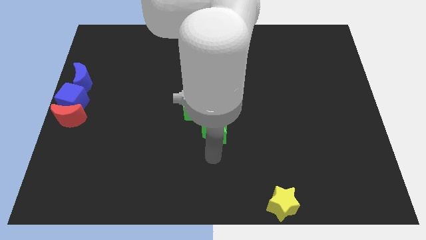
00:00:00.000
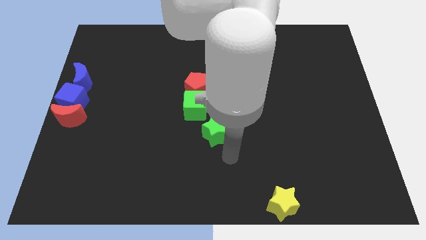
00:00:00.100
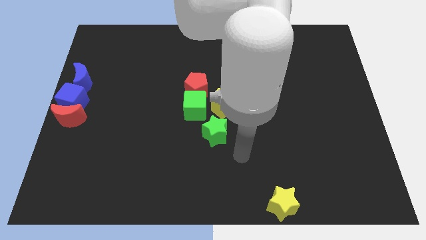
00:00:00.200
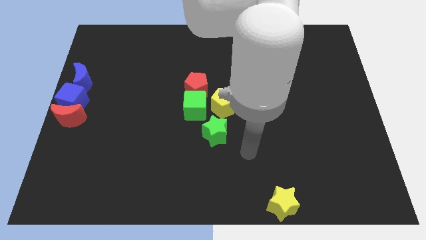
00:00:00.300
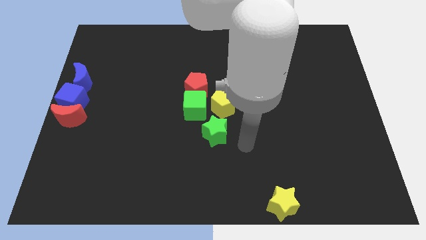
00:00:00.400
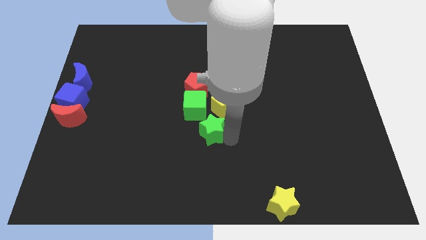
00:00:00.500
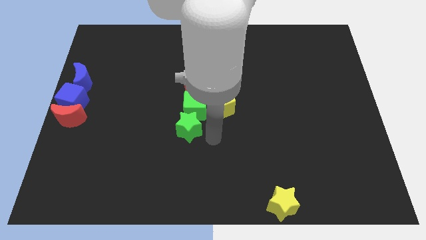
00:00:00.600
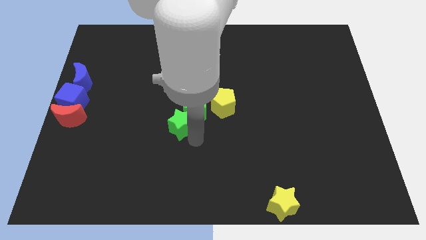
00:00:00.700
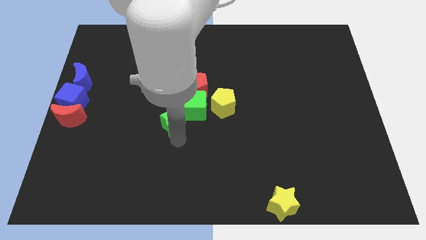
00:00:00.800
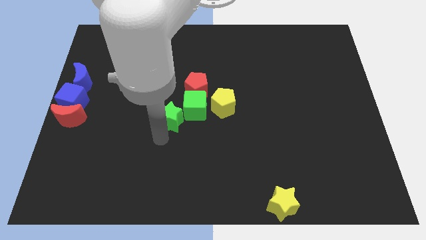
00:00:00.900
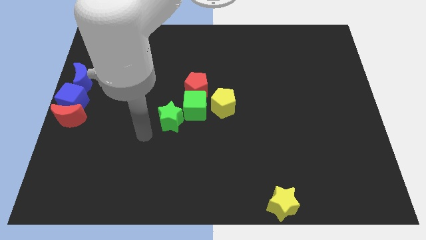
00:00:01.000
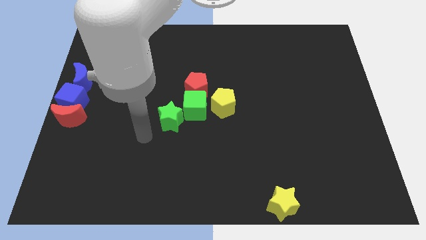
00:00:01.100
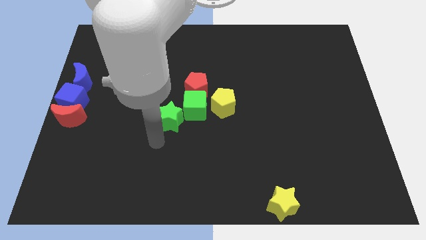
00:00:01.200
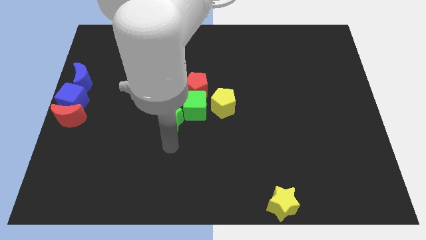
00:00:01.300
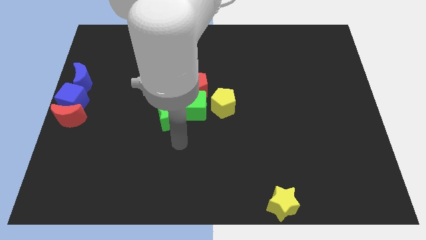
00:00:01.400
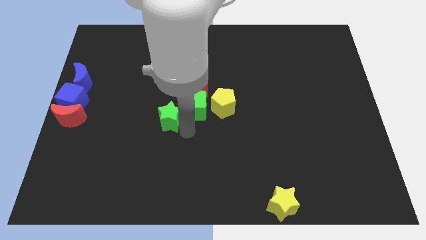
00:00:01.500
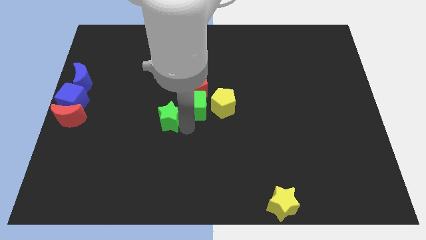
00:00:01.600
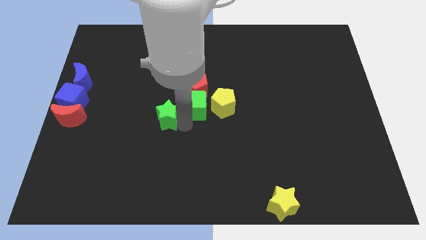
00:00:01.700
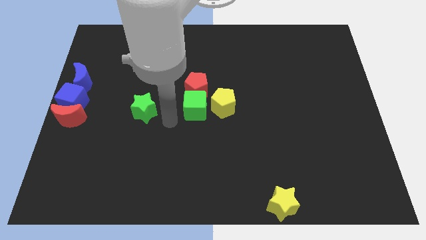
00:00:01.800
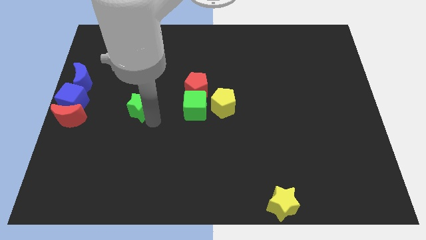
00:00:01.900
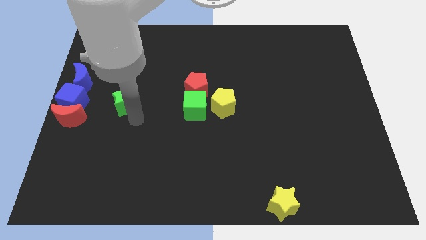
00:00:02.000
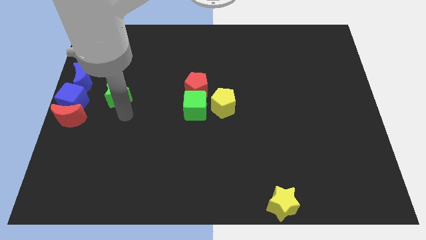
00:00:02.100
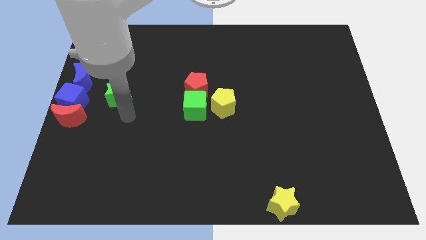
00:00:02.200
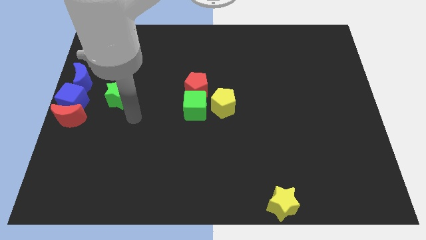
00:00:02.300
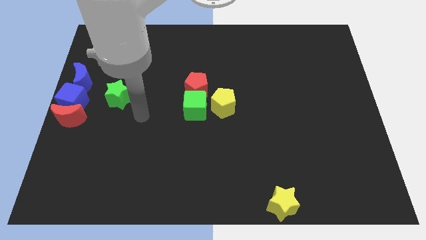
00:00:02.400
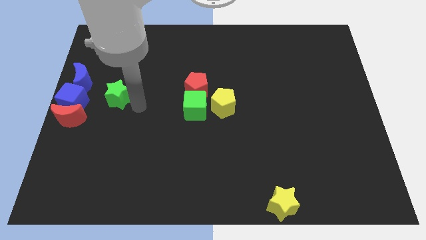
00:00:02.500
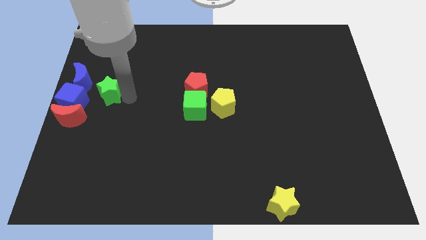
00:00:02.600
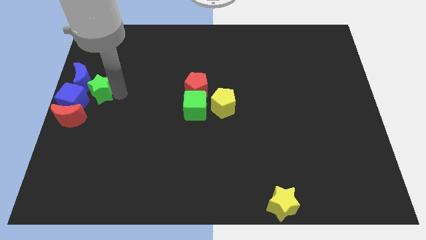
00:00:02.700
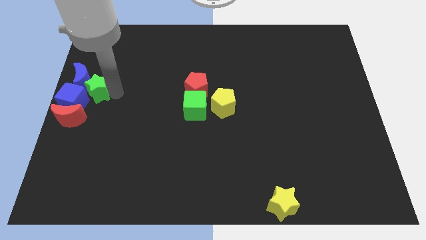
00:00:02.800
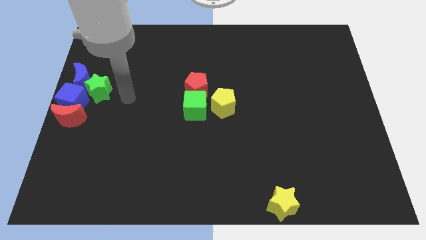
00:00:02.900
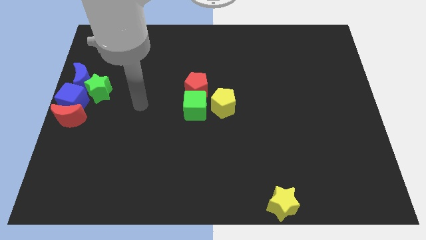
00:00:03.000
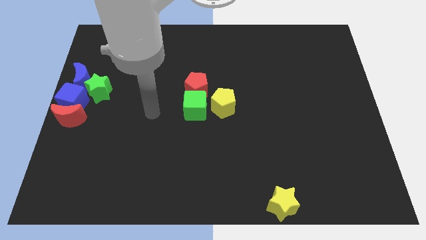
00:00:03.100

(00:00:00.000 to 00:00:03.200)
move the green star into the blue moon

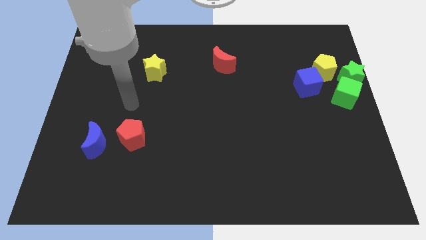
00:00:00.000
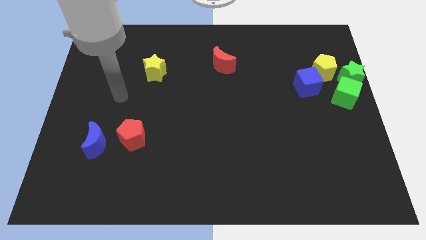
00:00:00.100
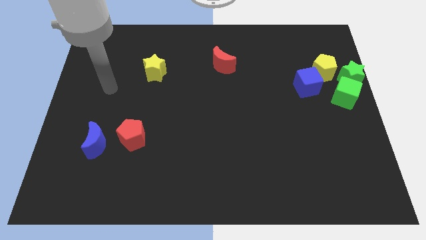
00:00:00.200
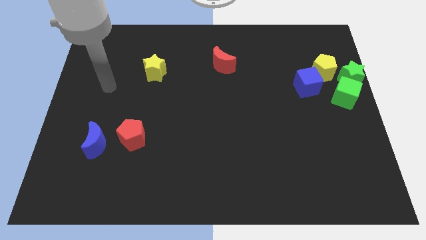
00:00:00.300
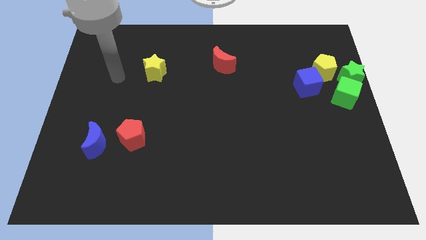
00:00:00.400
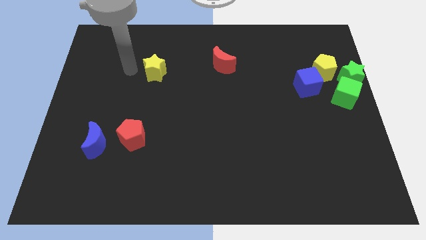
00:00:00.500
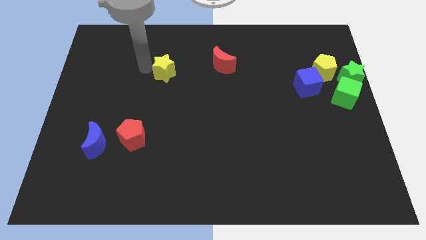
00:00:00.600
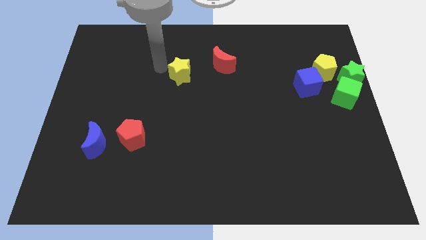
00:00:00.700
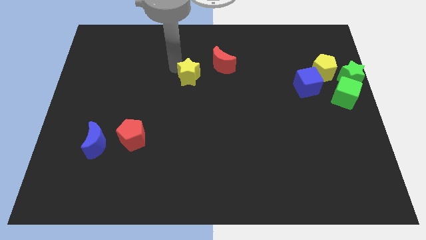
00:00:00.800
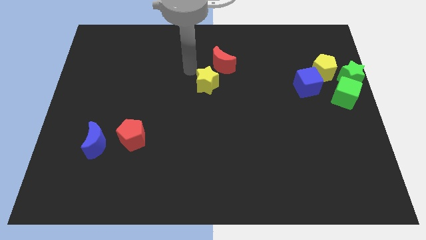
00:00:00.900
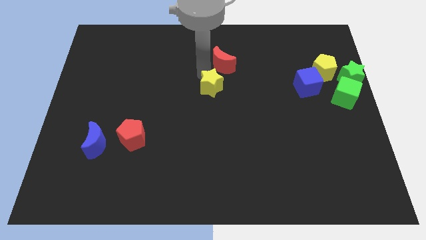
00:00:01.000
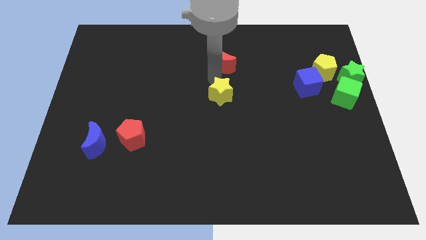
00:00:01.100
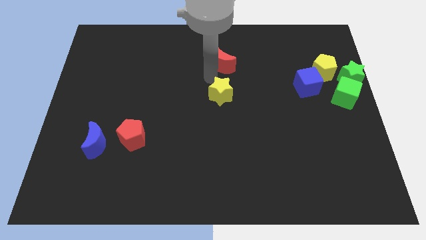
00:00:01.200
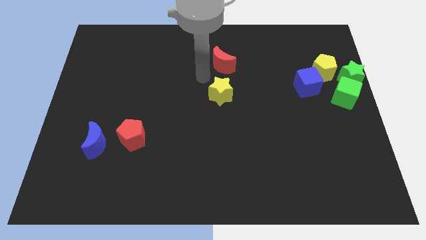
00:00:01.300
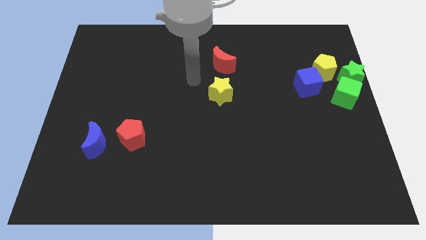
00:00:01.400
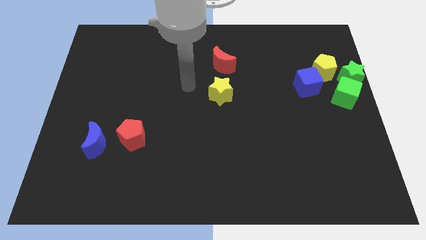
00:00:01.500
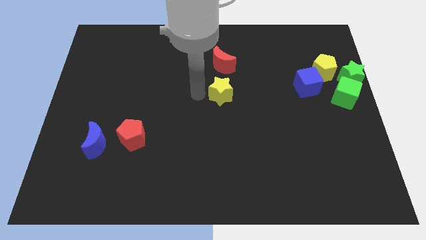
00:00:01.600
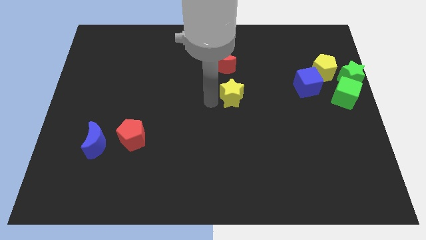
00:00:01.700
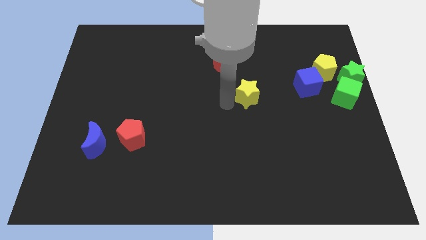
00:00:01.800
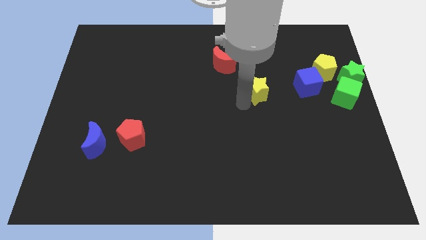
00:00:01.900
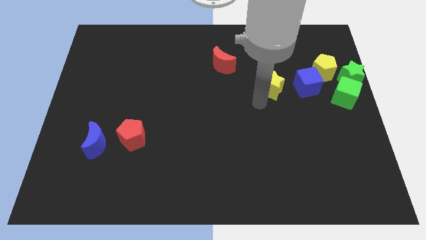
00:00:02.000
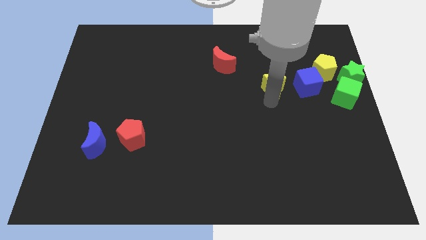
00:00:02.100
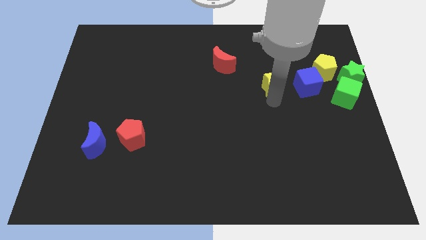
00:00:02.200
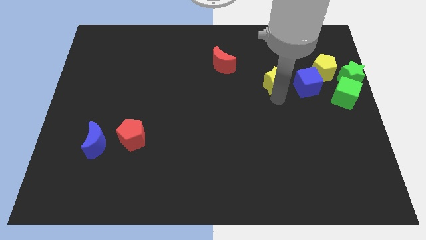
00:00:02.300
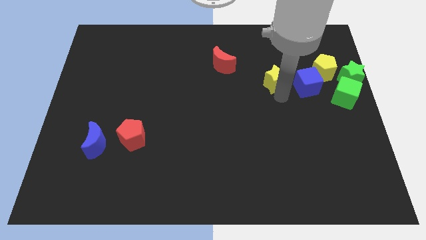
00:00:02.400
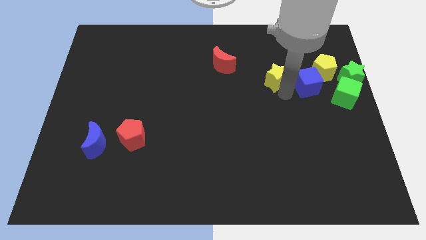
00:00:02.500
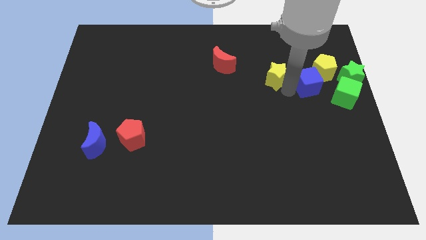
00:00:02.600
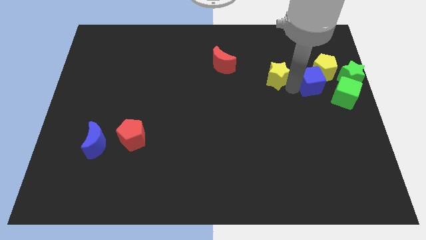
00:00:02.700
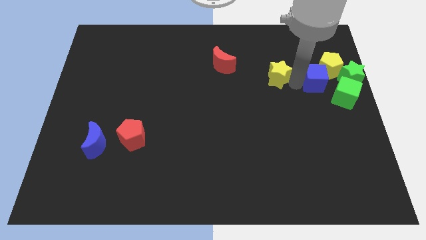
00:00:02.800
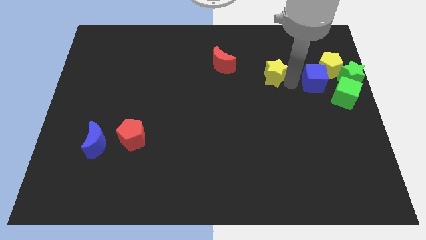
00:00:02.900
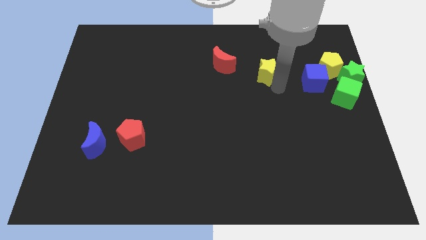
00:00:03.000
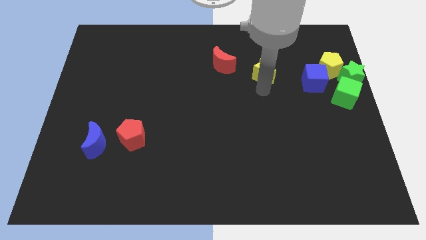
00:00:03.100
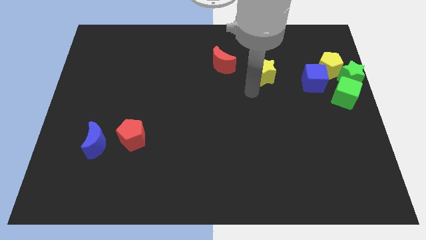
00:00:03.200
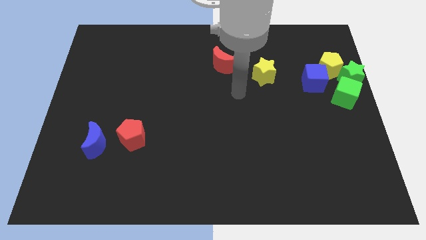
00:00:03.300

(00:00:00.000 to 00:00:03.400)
place the yellow star in between red moon and blue cube

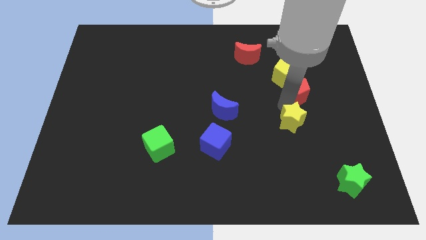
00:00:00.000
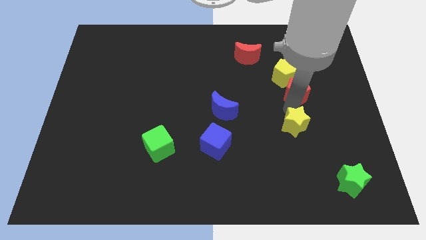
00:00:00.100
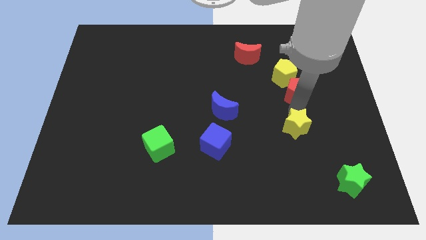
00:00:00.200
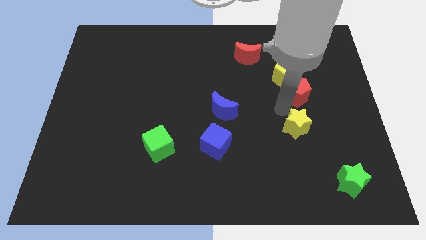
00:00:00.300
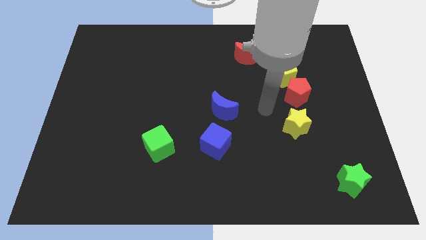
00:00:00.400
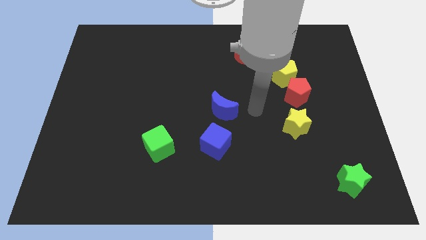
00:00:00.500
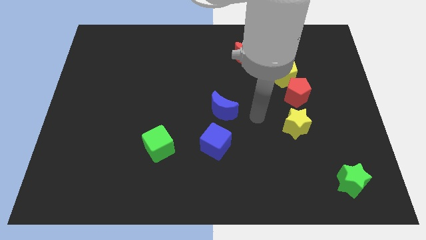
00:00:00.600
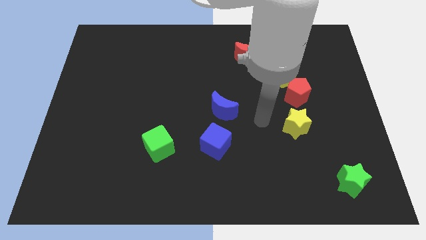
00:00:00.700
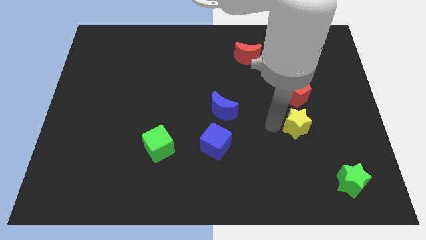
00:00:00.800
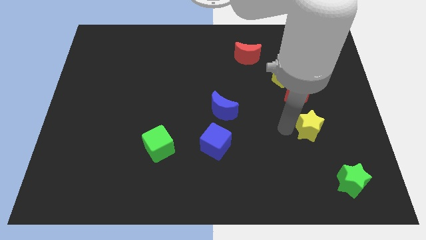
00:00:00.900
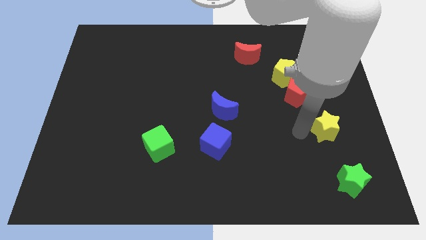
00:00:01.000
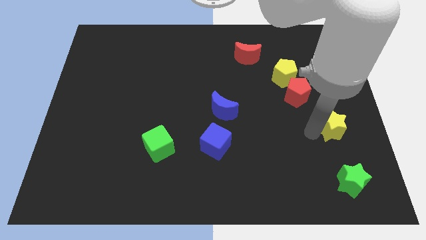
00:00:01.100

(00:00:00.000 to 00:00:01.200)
place the yellow star in between the green star and red pentagon

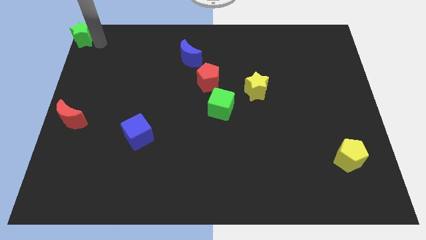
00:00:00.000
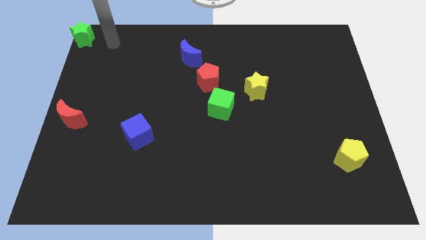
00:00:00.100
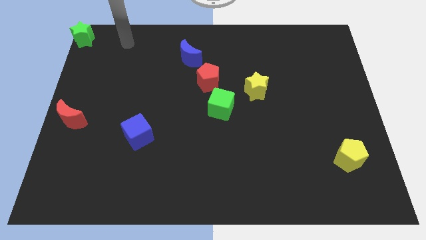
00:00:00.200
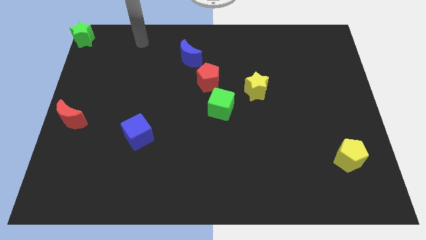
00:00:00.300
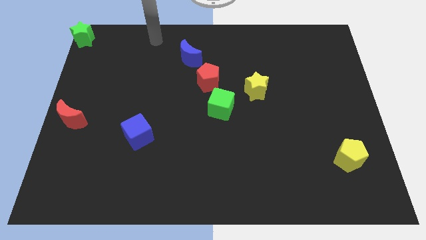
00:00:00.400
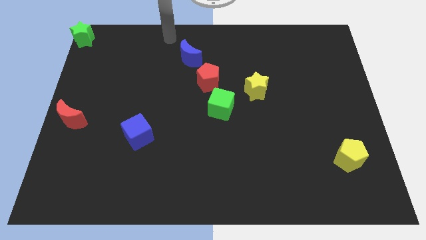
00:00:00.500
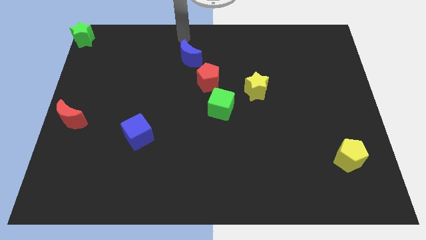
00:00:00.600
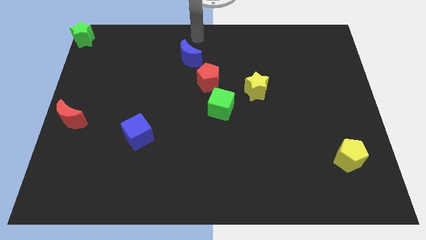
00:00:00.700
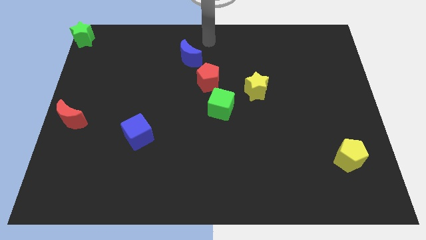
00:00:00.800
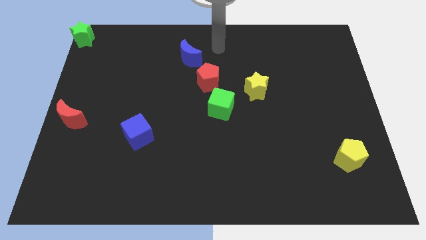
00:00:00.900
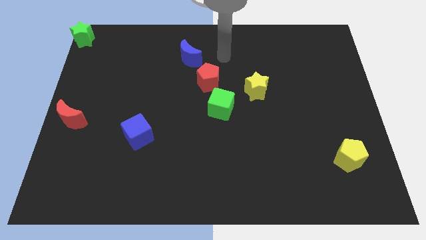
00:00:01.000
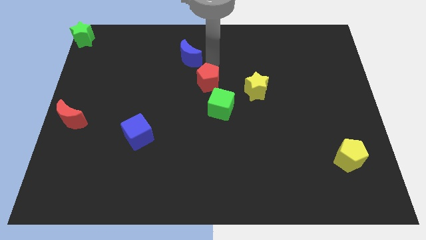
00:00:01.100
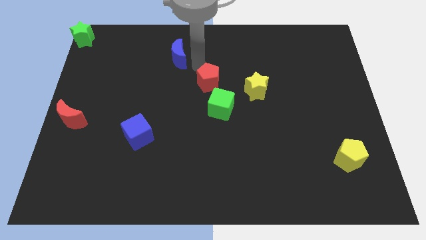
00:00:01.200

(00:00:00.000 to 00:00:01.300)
place the arm above the red pentagon
